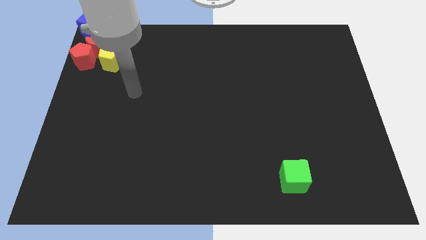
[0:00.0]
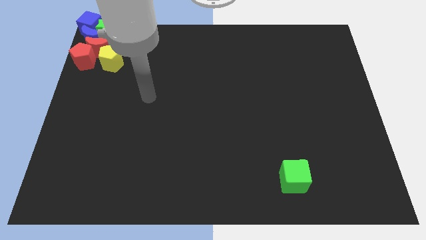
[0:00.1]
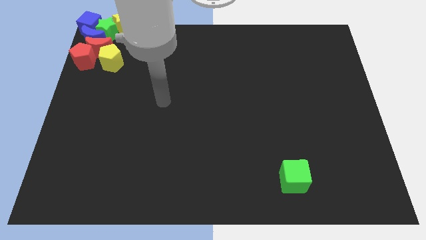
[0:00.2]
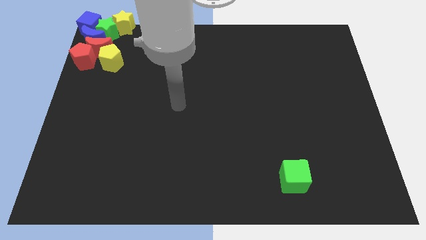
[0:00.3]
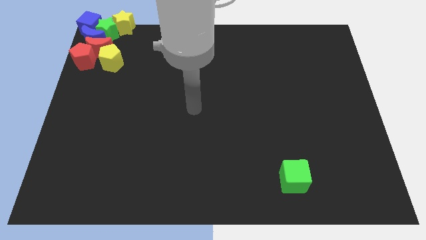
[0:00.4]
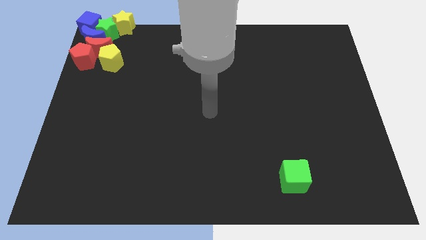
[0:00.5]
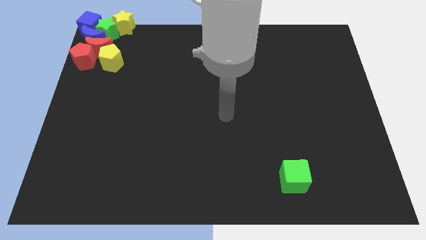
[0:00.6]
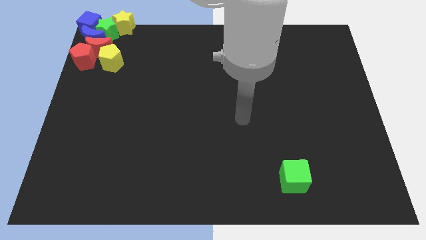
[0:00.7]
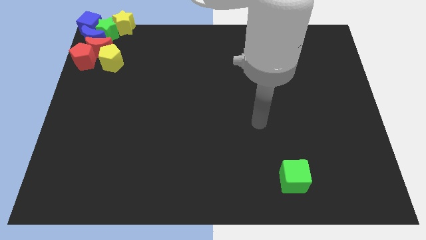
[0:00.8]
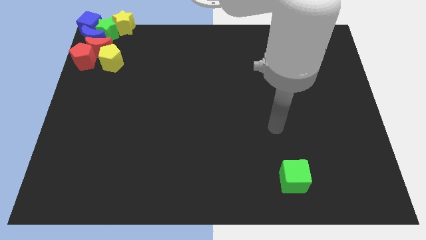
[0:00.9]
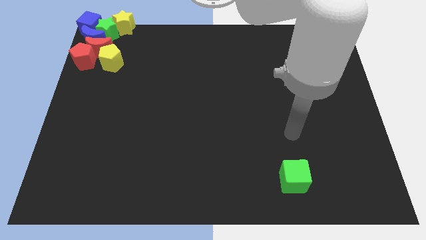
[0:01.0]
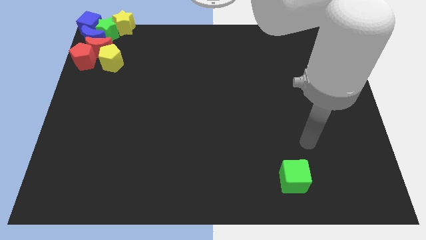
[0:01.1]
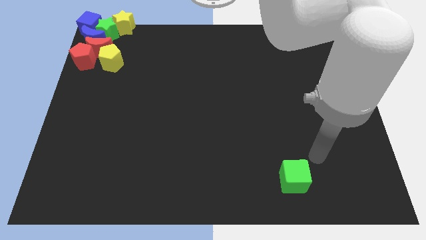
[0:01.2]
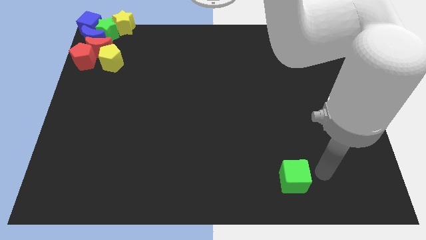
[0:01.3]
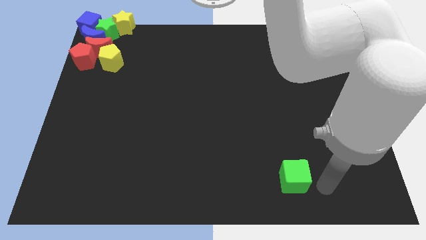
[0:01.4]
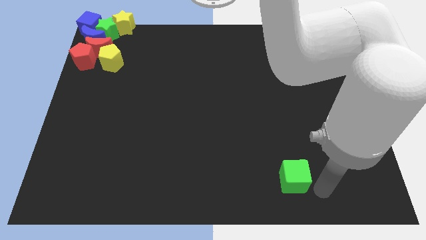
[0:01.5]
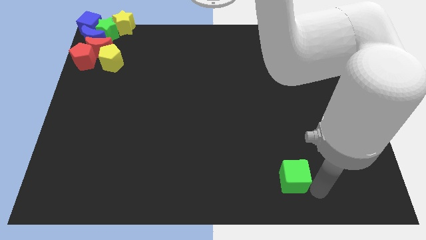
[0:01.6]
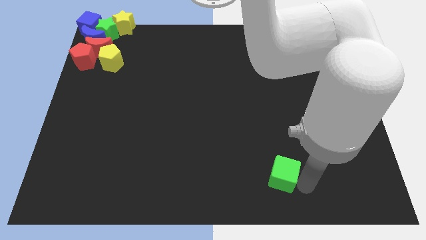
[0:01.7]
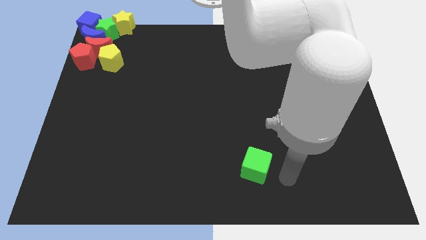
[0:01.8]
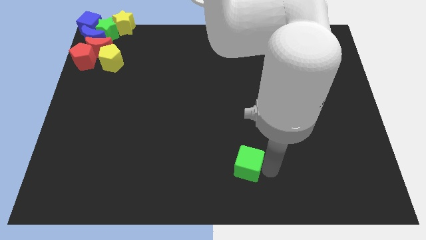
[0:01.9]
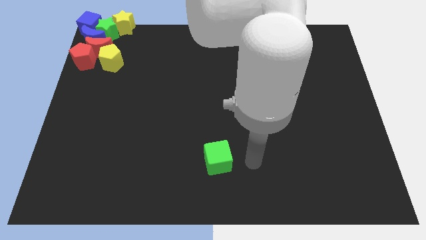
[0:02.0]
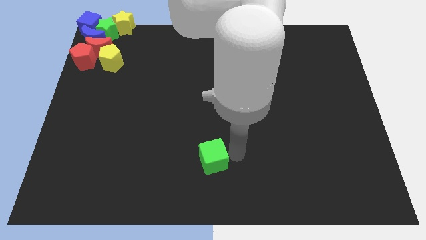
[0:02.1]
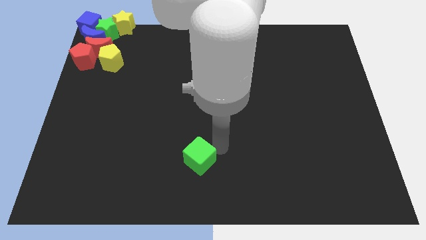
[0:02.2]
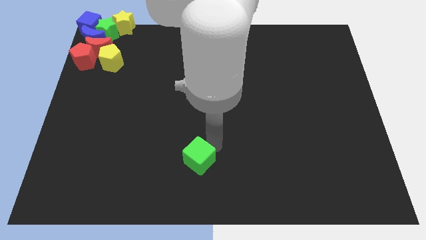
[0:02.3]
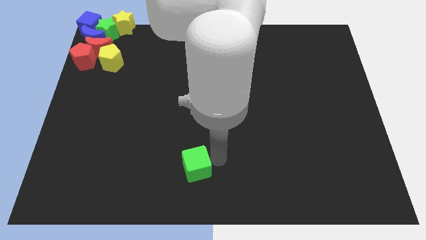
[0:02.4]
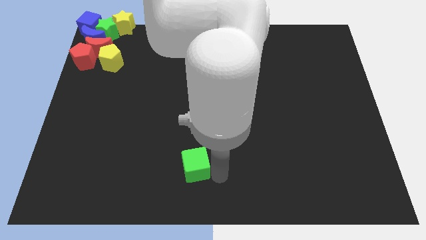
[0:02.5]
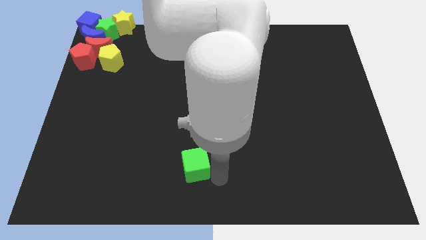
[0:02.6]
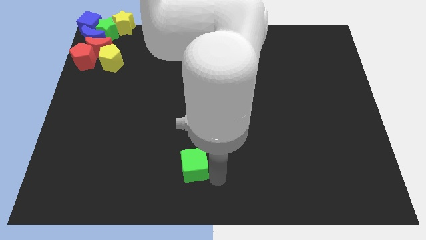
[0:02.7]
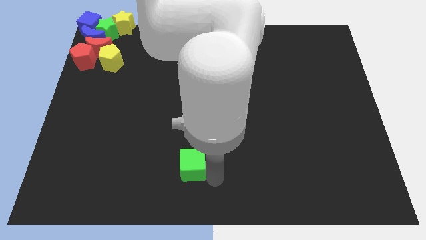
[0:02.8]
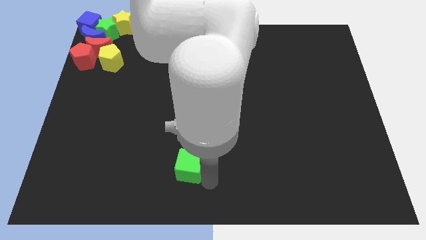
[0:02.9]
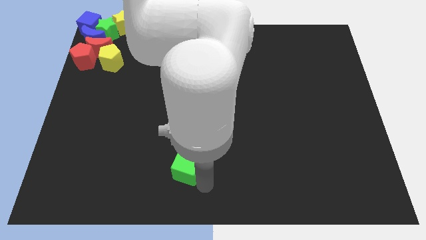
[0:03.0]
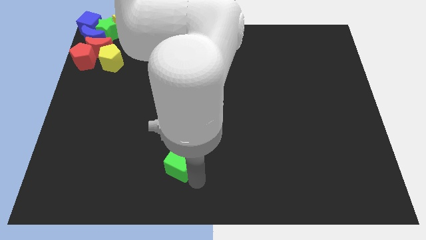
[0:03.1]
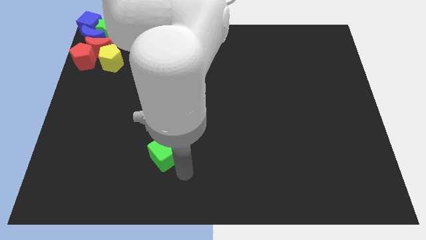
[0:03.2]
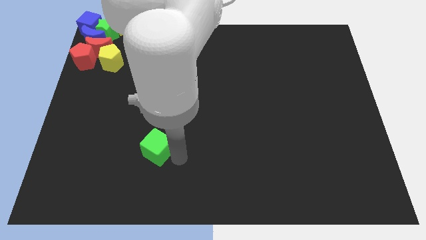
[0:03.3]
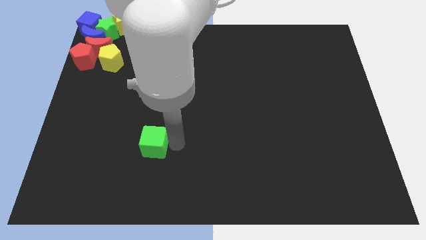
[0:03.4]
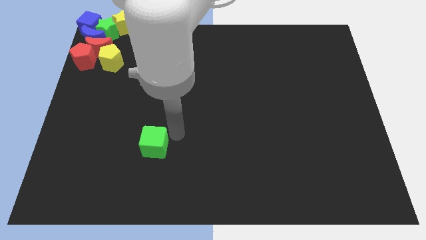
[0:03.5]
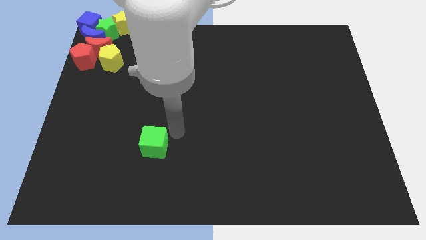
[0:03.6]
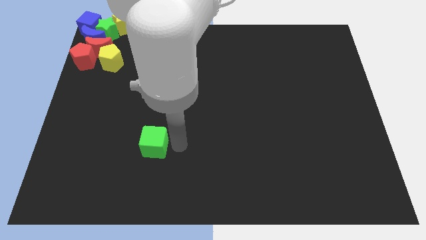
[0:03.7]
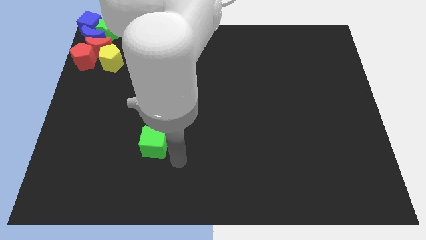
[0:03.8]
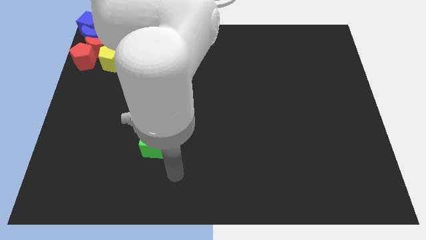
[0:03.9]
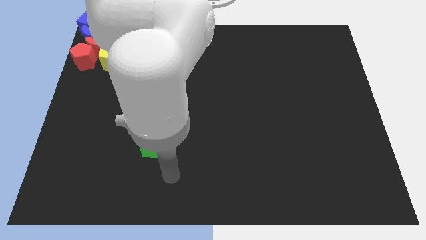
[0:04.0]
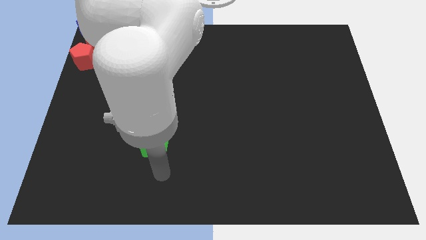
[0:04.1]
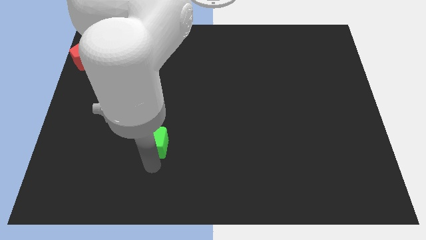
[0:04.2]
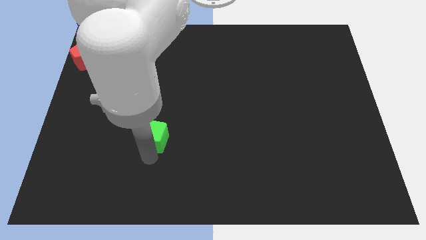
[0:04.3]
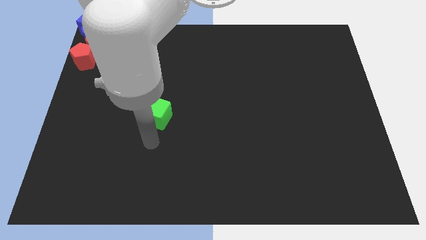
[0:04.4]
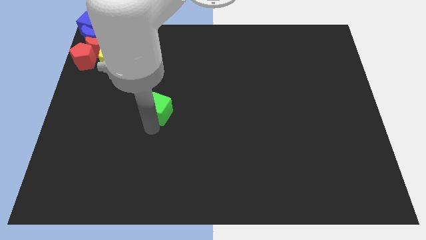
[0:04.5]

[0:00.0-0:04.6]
slide the green cube towards the group of blocks

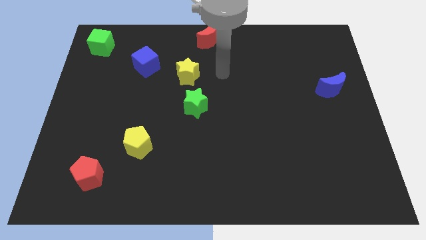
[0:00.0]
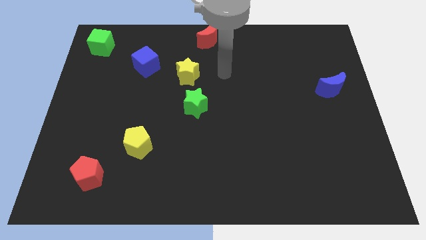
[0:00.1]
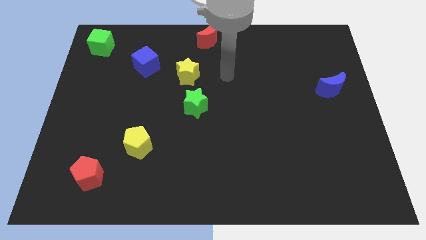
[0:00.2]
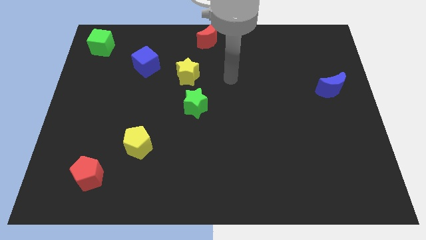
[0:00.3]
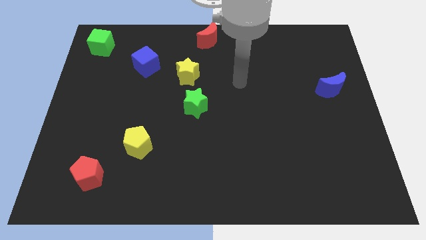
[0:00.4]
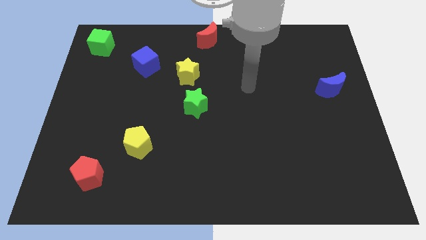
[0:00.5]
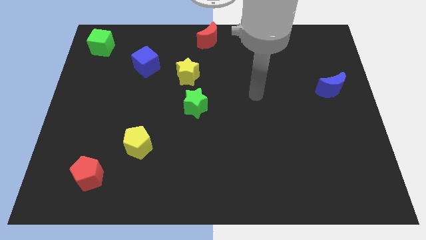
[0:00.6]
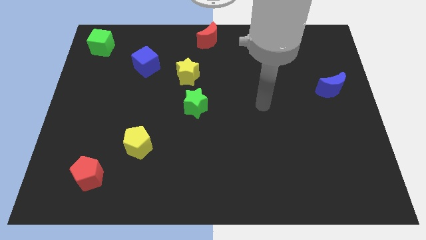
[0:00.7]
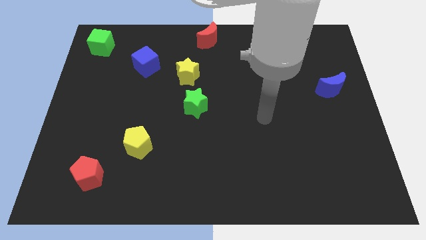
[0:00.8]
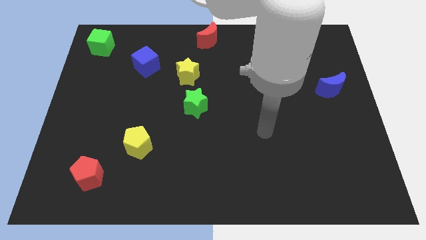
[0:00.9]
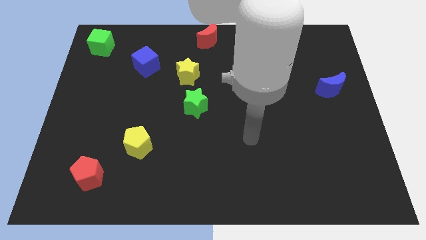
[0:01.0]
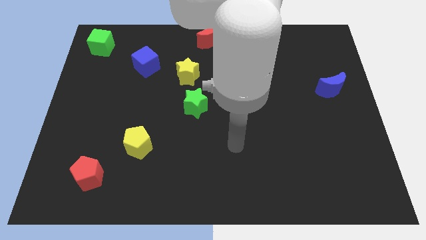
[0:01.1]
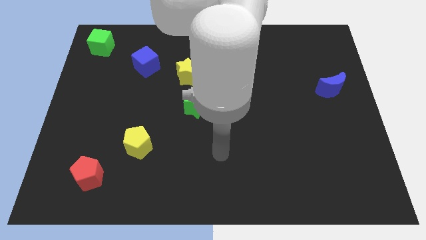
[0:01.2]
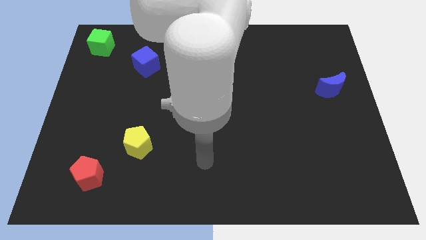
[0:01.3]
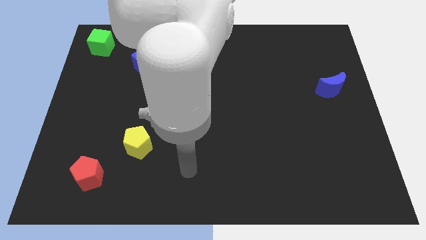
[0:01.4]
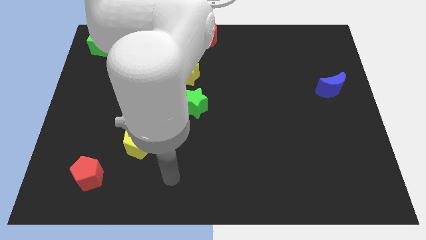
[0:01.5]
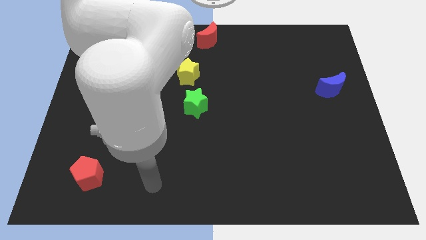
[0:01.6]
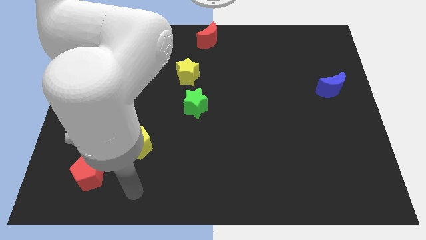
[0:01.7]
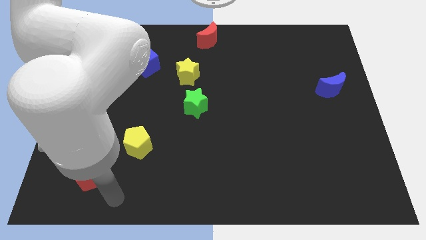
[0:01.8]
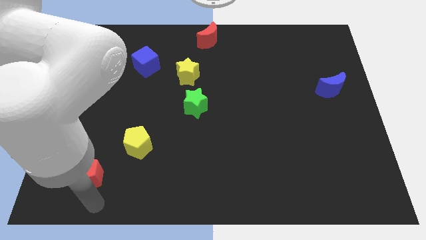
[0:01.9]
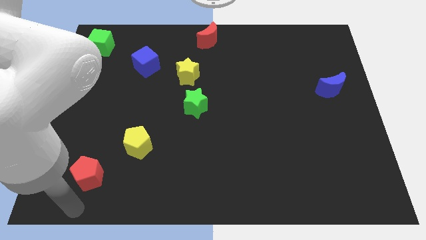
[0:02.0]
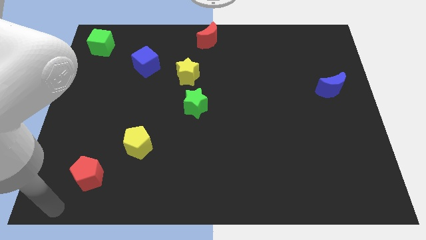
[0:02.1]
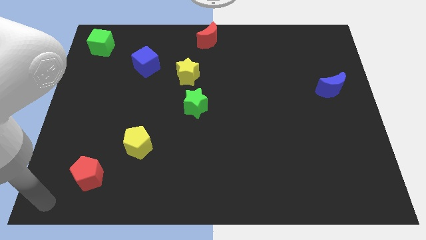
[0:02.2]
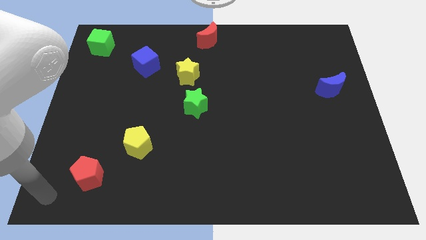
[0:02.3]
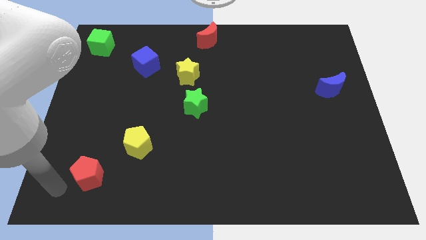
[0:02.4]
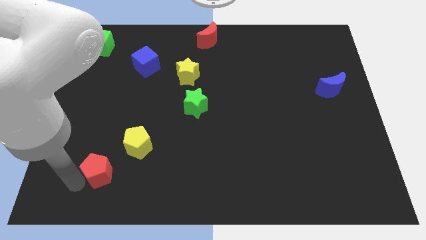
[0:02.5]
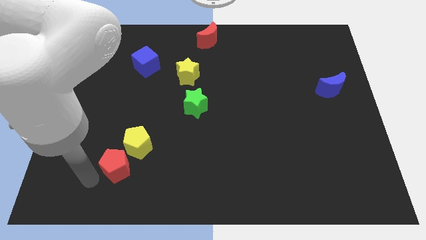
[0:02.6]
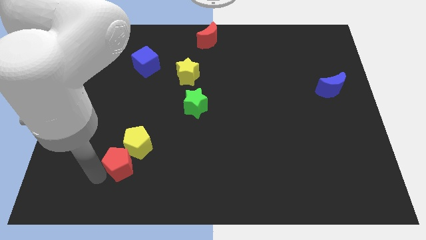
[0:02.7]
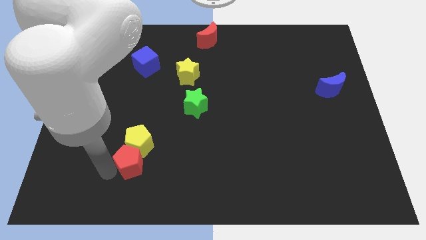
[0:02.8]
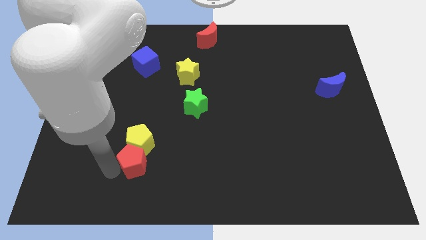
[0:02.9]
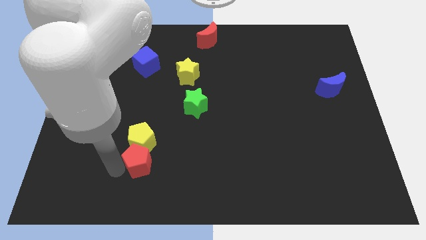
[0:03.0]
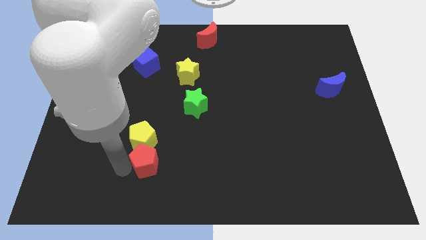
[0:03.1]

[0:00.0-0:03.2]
push the red pentagon into the yellow pentagon

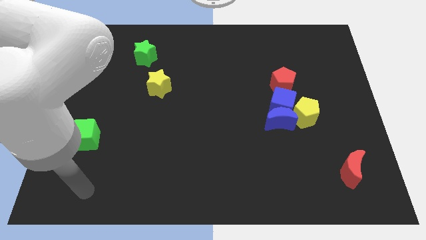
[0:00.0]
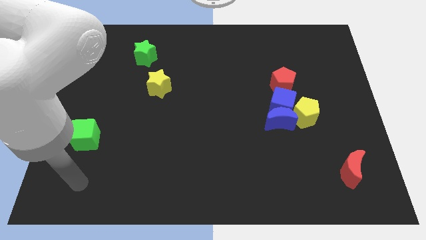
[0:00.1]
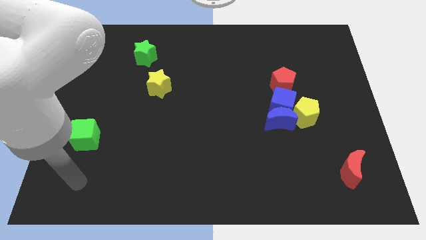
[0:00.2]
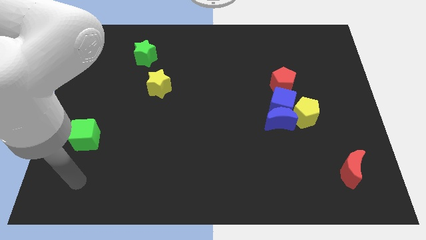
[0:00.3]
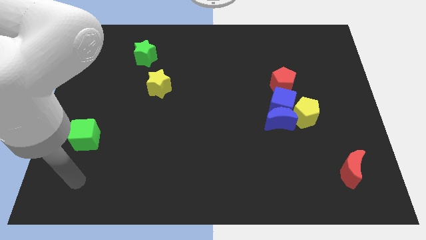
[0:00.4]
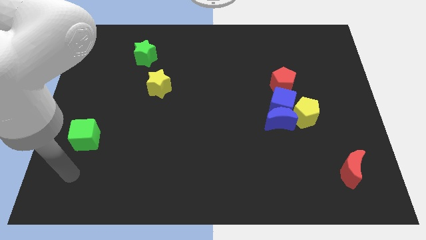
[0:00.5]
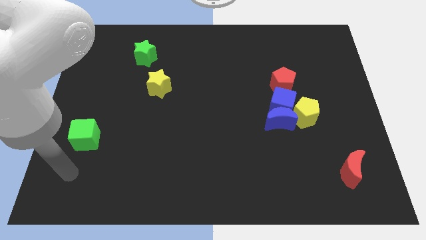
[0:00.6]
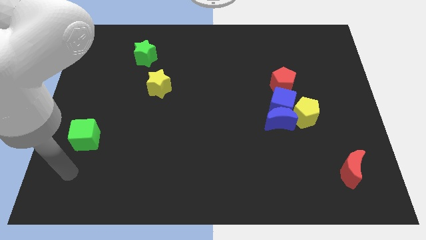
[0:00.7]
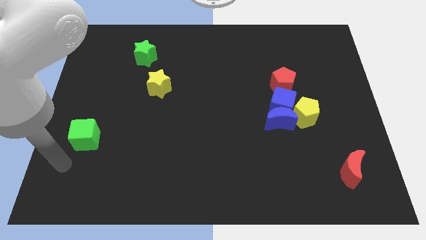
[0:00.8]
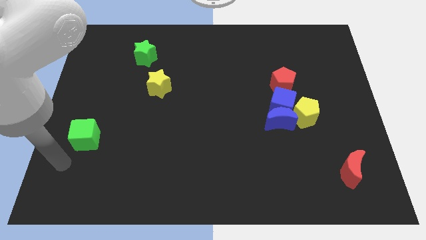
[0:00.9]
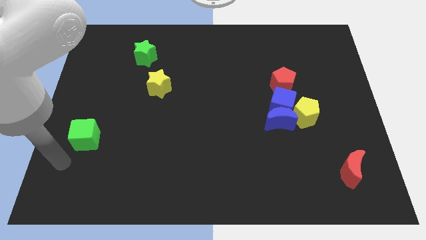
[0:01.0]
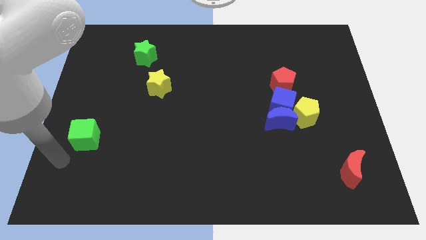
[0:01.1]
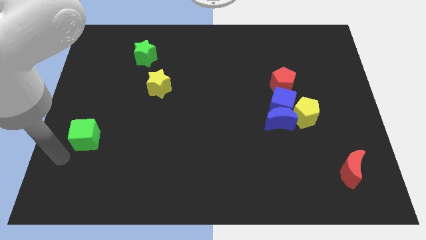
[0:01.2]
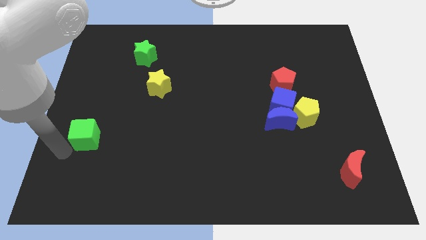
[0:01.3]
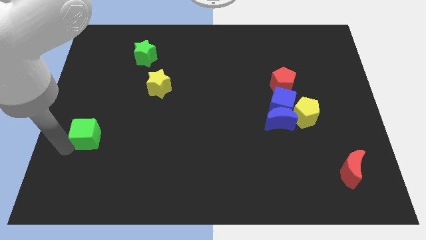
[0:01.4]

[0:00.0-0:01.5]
move the arm to the left of the green block
